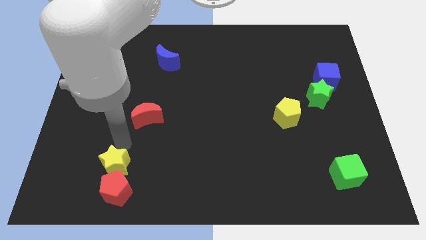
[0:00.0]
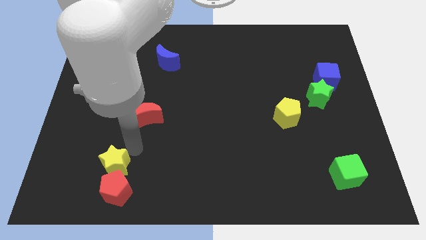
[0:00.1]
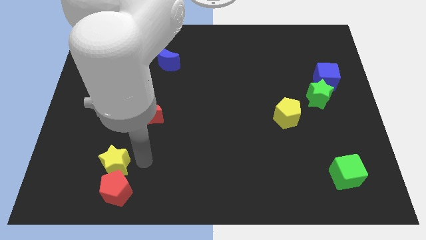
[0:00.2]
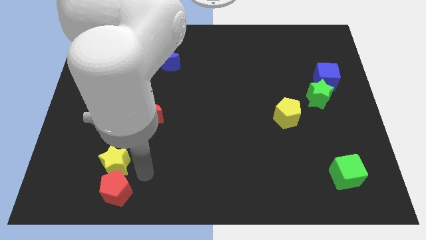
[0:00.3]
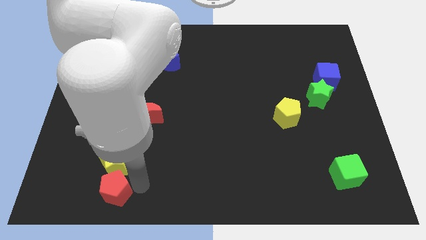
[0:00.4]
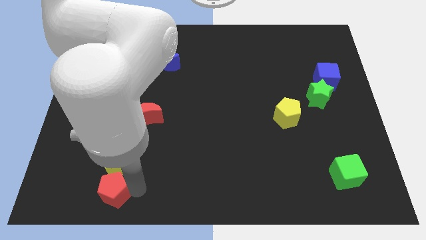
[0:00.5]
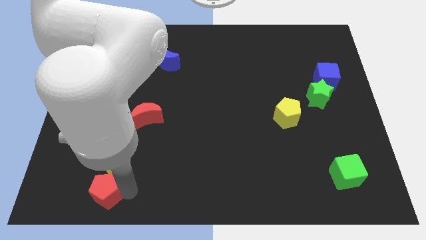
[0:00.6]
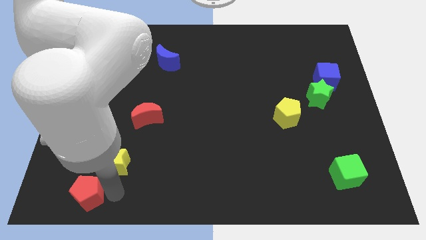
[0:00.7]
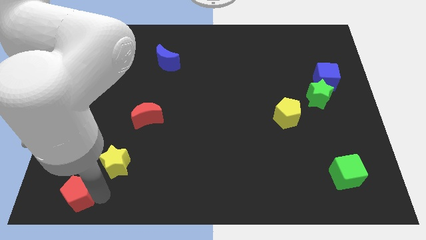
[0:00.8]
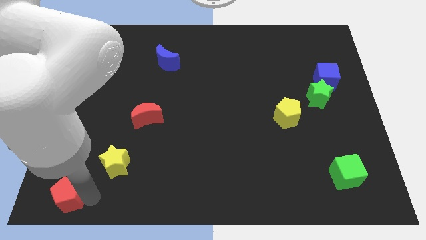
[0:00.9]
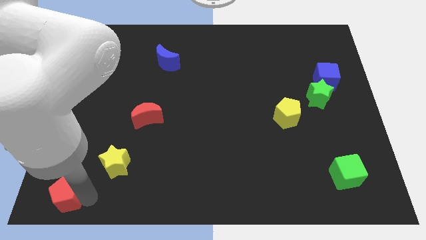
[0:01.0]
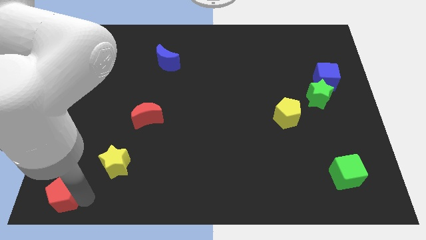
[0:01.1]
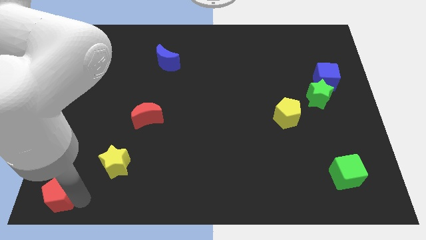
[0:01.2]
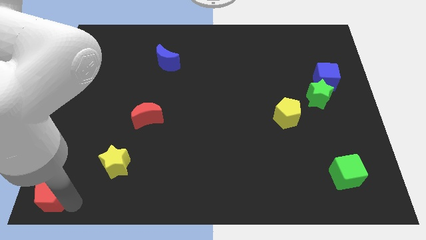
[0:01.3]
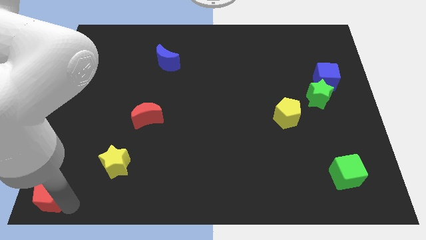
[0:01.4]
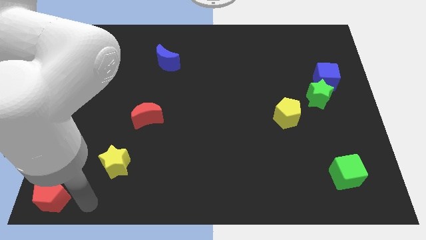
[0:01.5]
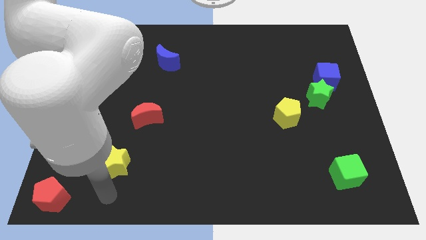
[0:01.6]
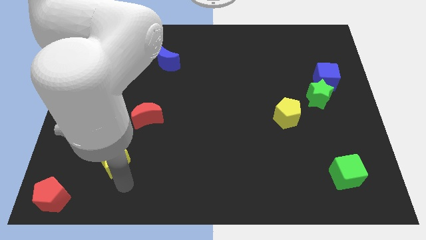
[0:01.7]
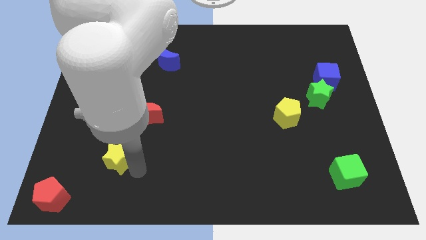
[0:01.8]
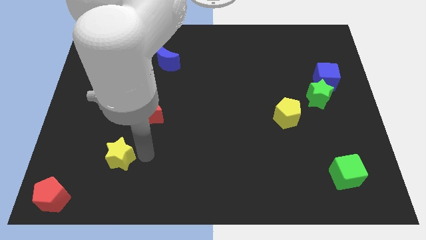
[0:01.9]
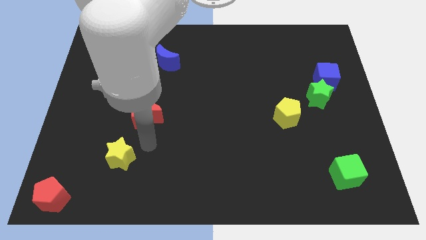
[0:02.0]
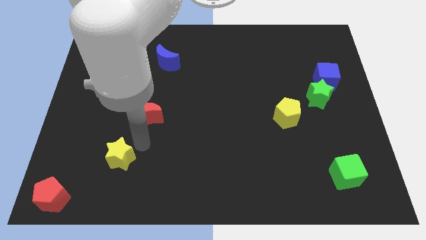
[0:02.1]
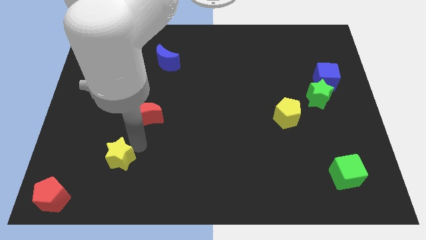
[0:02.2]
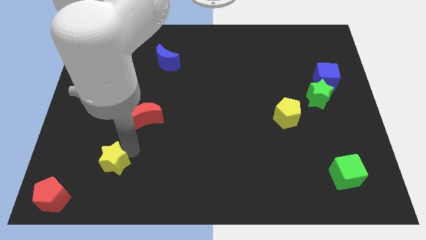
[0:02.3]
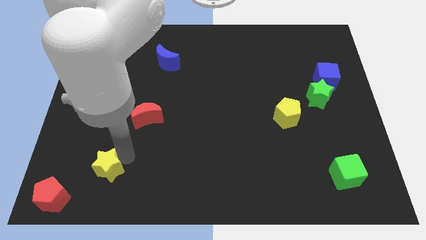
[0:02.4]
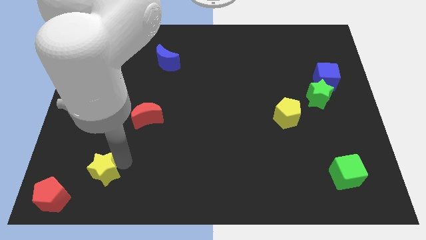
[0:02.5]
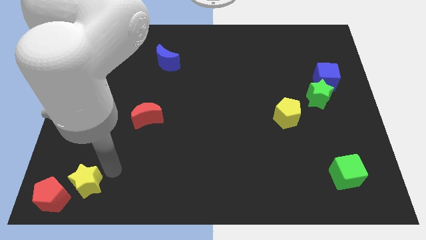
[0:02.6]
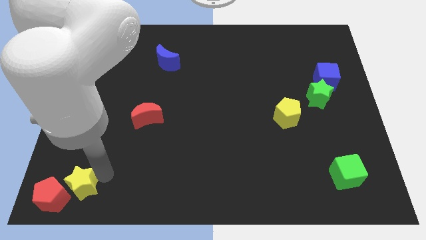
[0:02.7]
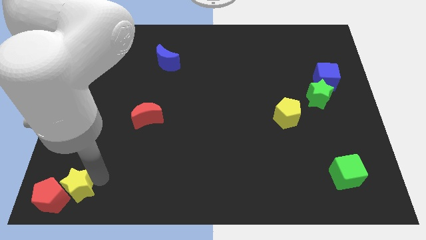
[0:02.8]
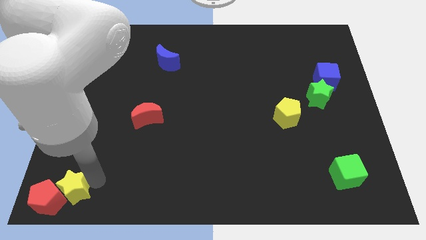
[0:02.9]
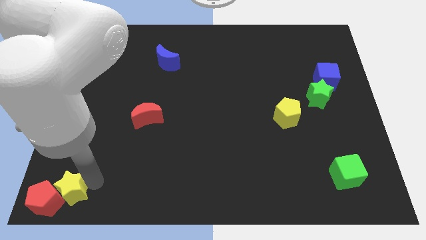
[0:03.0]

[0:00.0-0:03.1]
place yellow star beside red pentagon

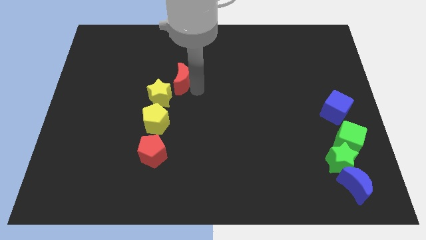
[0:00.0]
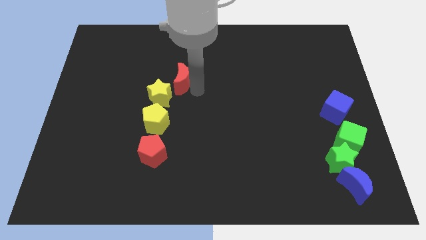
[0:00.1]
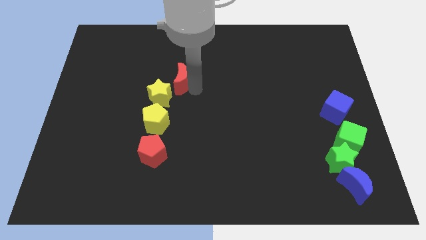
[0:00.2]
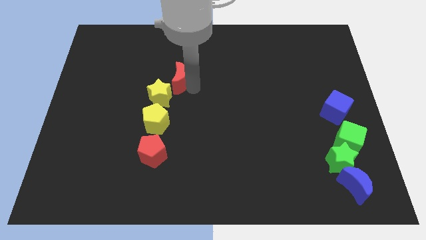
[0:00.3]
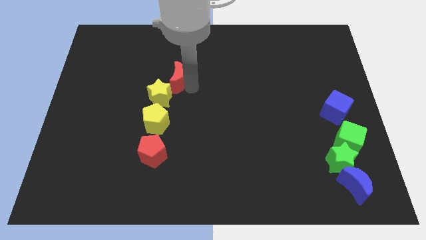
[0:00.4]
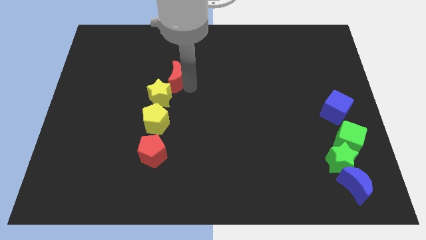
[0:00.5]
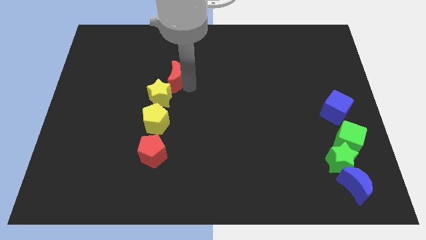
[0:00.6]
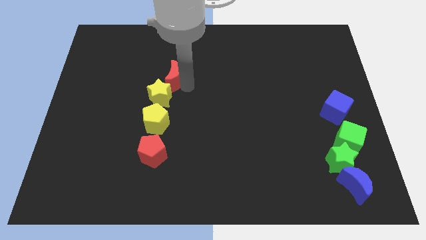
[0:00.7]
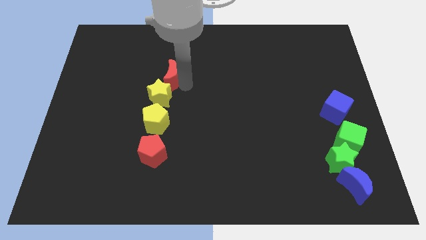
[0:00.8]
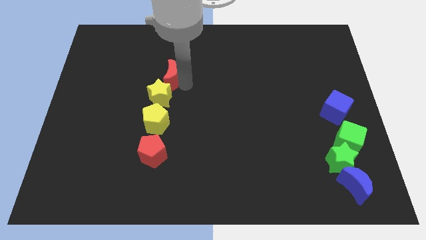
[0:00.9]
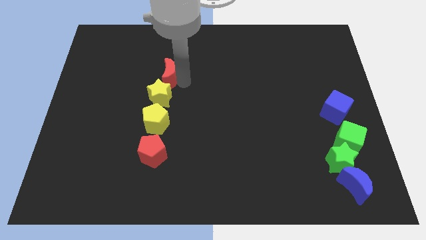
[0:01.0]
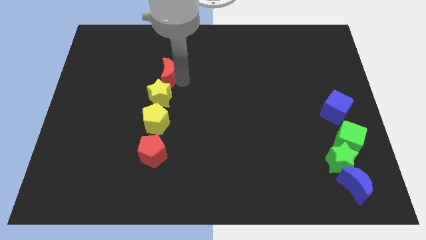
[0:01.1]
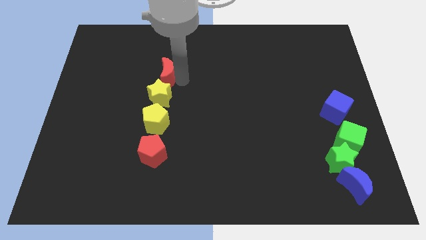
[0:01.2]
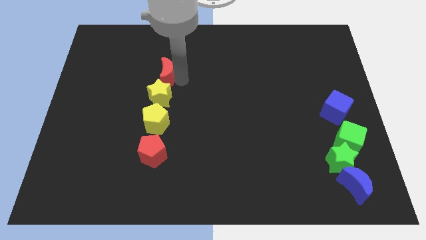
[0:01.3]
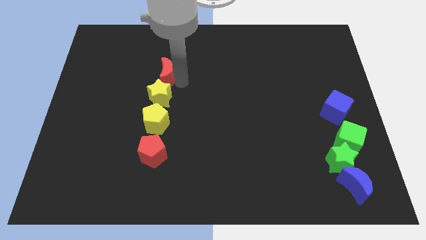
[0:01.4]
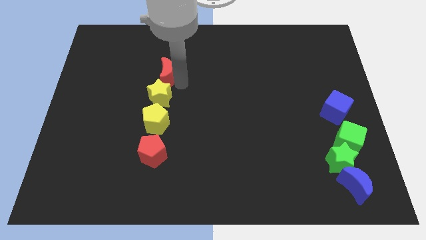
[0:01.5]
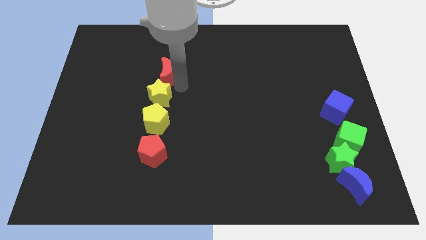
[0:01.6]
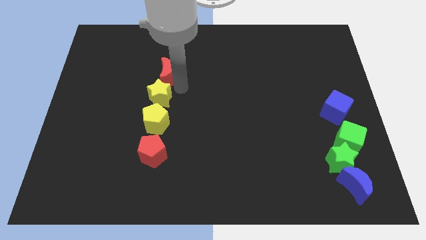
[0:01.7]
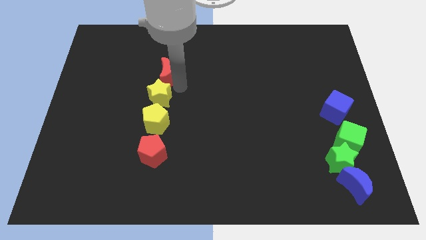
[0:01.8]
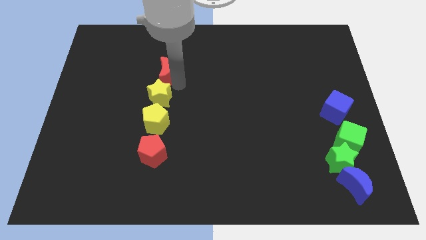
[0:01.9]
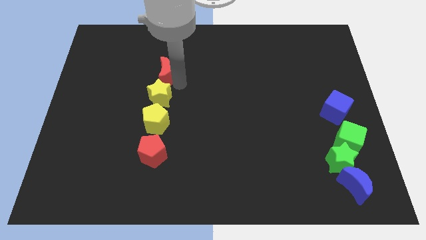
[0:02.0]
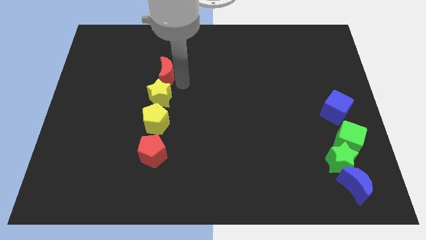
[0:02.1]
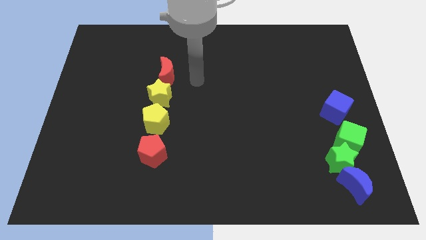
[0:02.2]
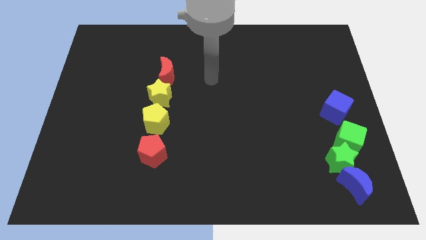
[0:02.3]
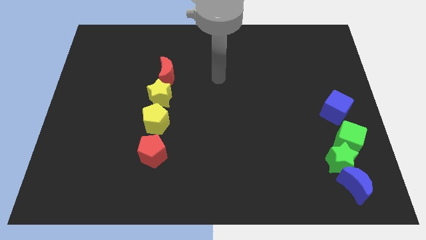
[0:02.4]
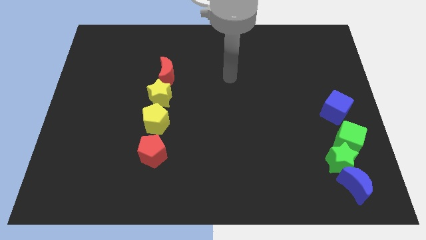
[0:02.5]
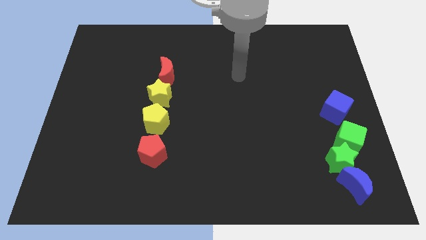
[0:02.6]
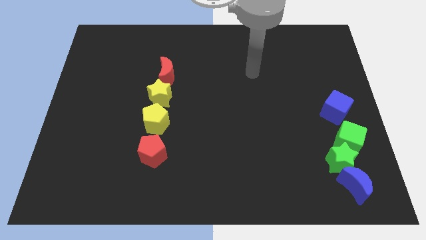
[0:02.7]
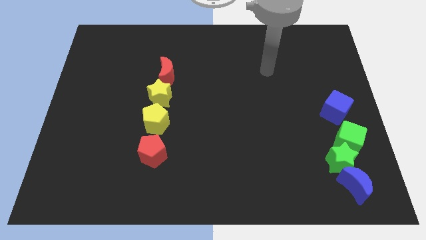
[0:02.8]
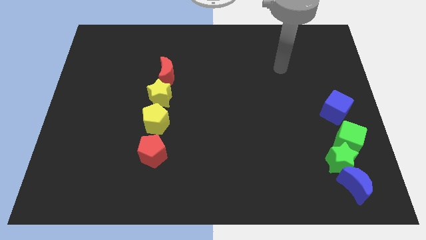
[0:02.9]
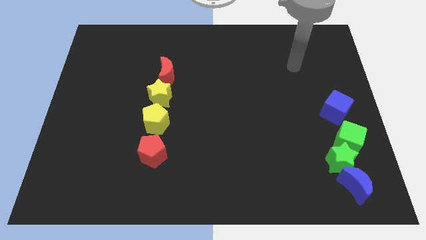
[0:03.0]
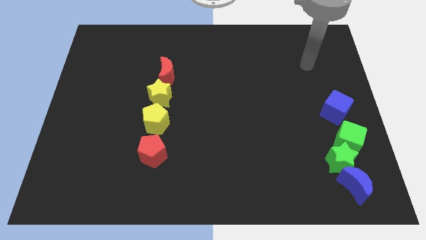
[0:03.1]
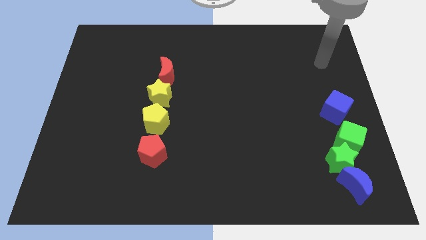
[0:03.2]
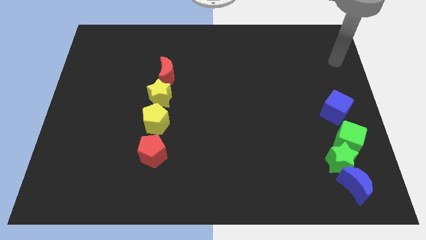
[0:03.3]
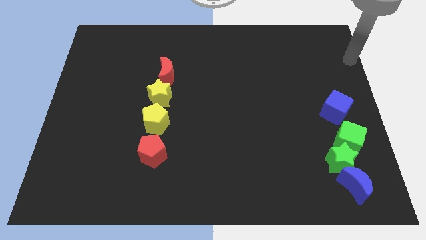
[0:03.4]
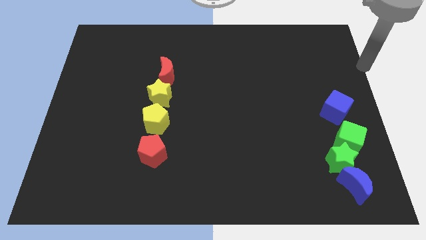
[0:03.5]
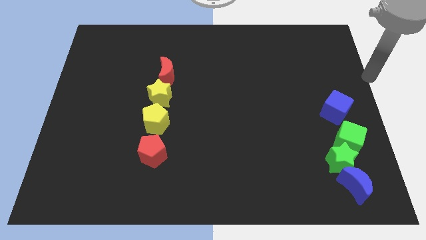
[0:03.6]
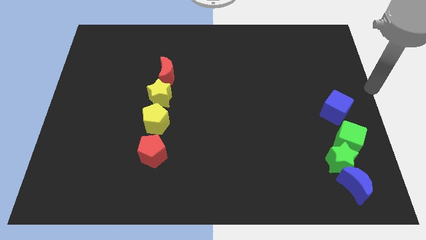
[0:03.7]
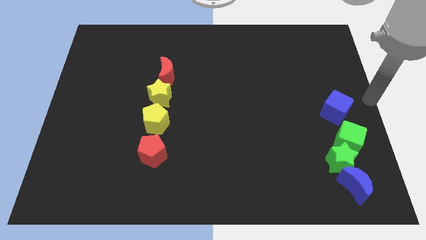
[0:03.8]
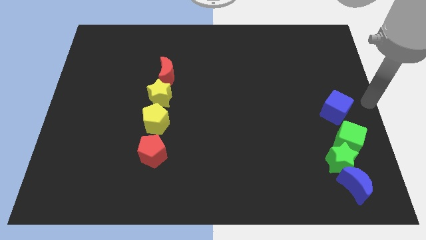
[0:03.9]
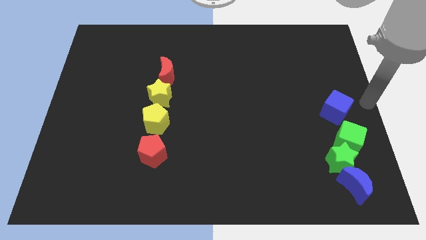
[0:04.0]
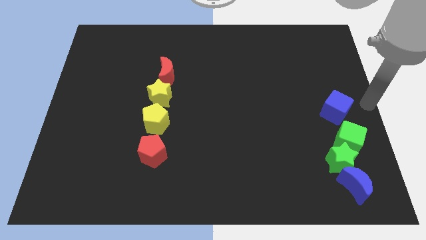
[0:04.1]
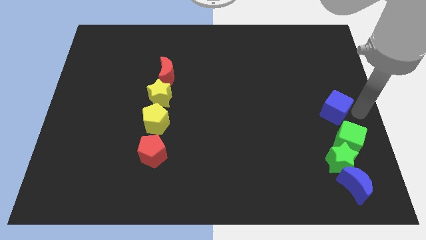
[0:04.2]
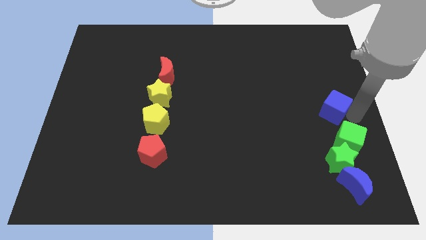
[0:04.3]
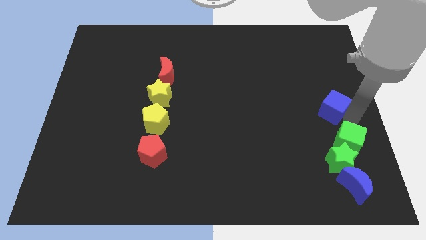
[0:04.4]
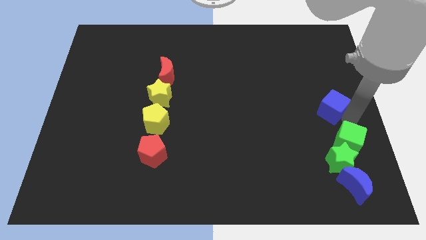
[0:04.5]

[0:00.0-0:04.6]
move your arm in between blue cube and green cube

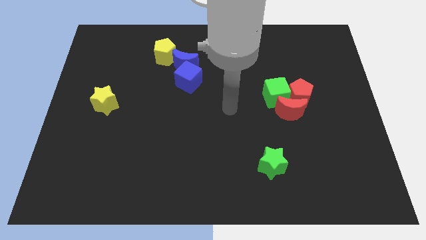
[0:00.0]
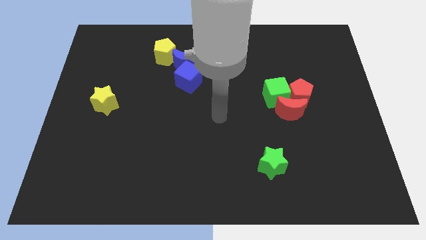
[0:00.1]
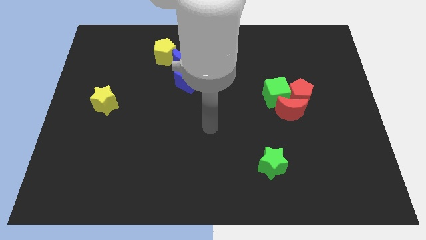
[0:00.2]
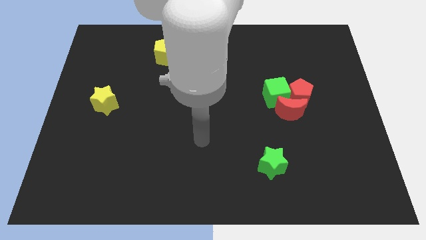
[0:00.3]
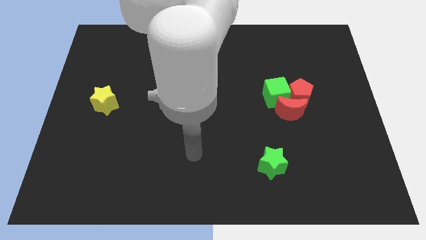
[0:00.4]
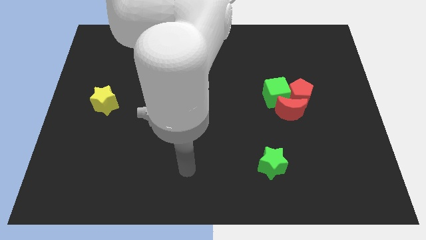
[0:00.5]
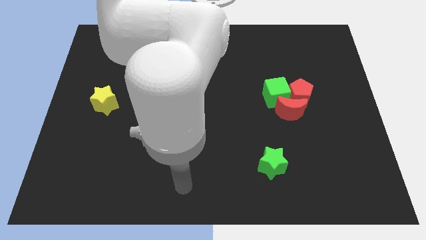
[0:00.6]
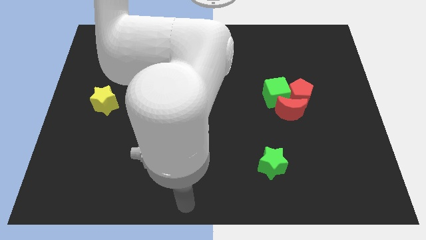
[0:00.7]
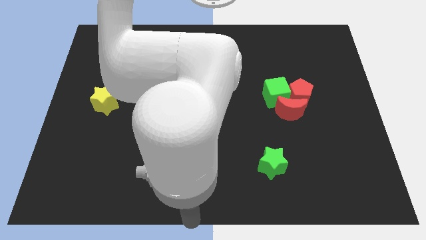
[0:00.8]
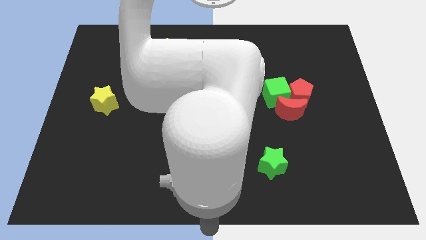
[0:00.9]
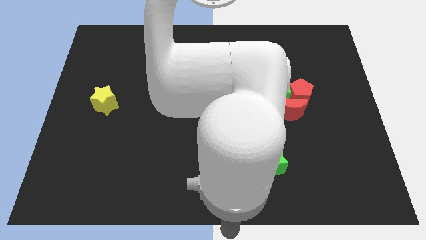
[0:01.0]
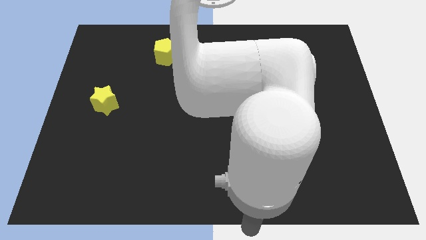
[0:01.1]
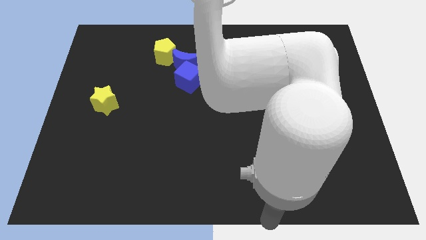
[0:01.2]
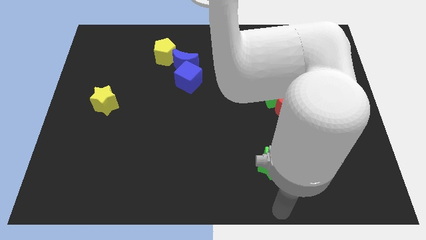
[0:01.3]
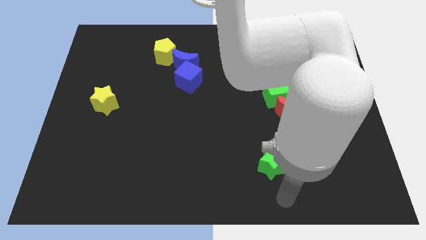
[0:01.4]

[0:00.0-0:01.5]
move the arm to the bottom right of the board
